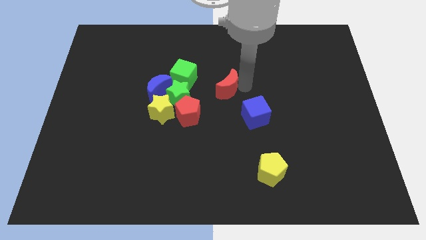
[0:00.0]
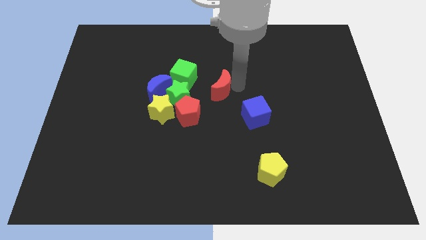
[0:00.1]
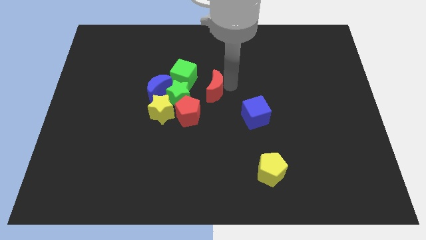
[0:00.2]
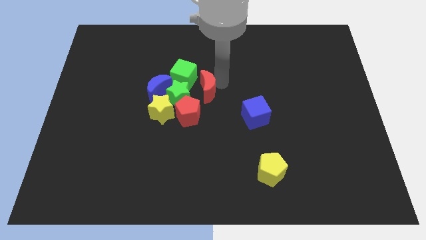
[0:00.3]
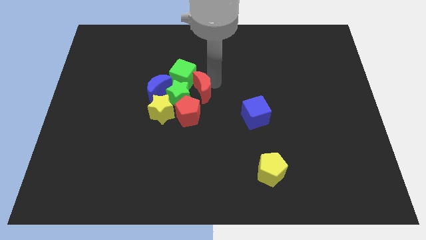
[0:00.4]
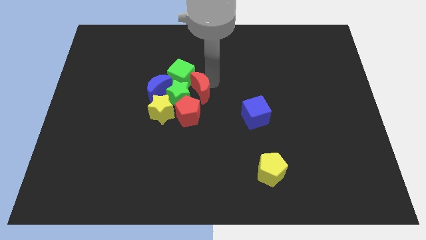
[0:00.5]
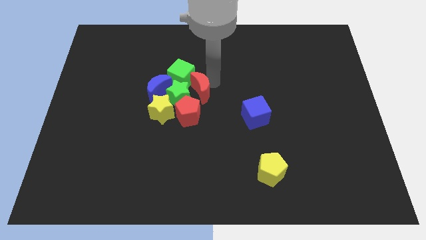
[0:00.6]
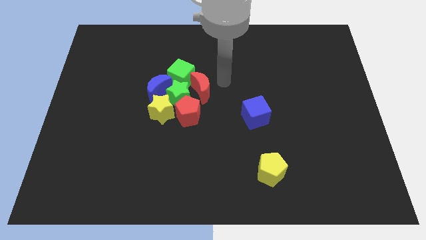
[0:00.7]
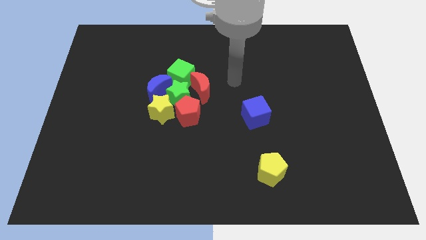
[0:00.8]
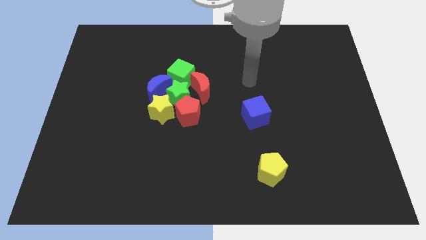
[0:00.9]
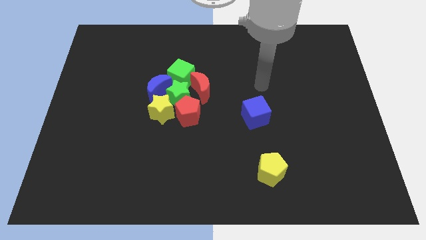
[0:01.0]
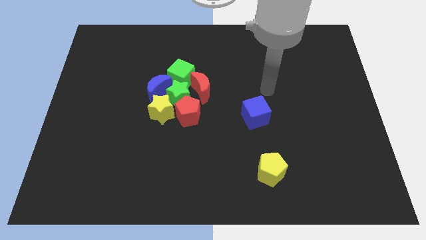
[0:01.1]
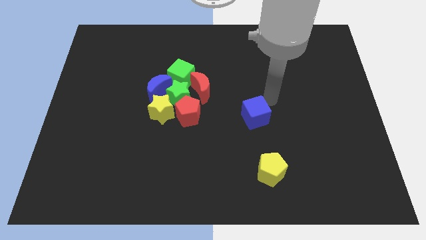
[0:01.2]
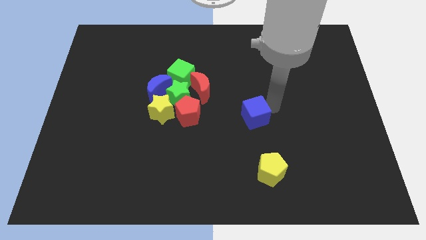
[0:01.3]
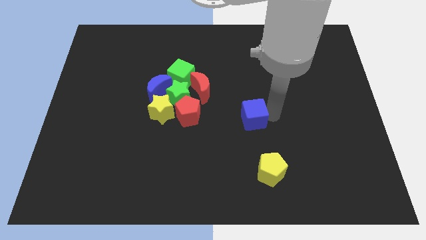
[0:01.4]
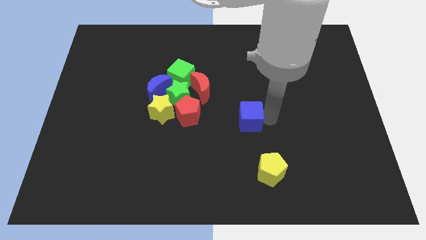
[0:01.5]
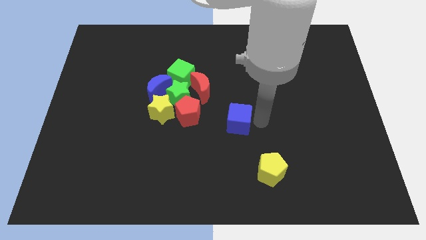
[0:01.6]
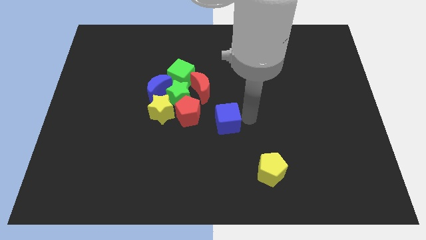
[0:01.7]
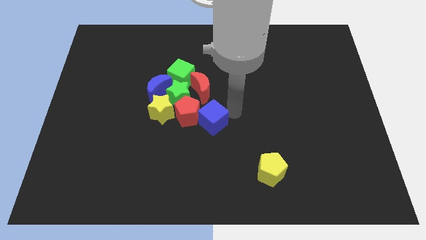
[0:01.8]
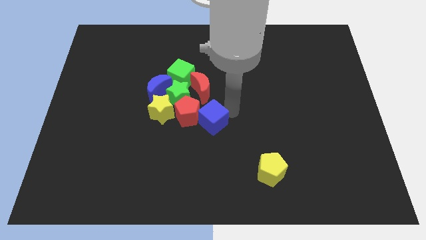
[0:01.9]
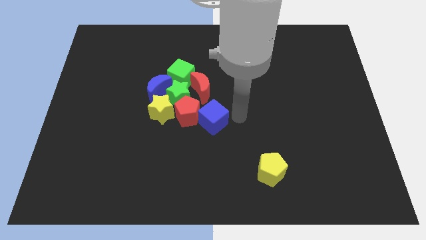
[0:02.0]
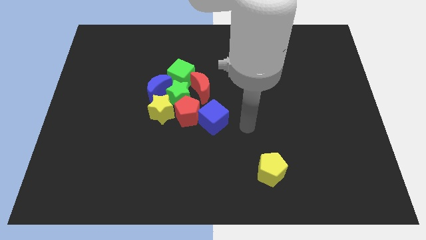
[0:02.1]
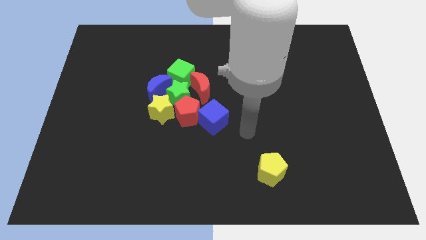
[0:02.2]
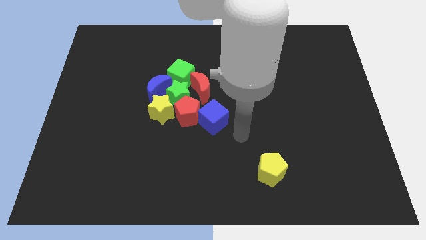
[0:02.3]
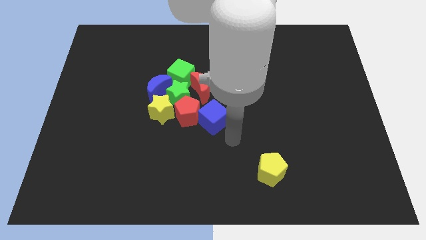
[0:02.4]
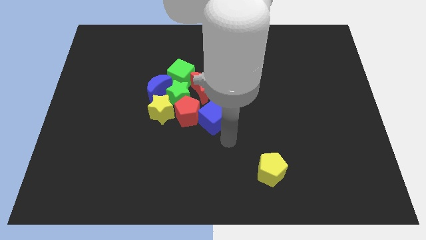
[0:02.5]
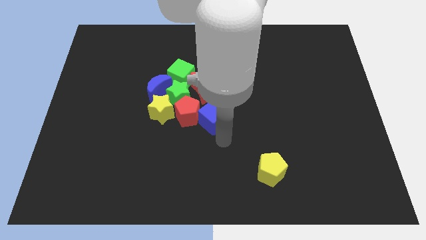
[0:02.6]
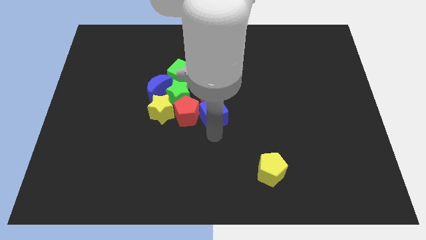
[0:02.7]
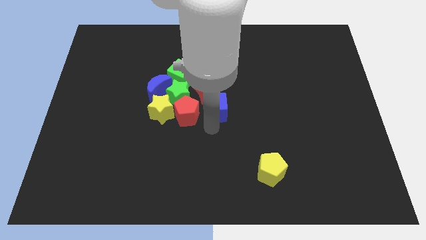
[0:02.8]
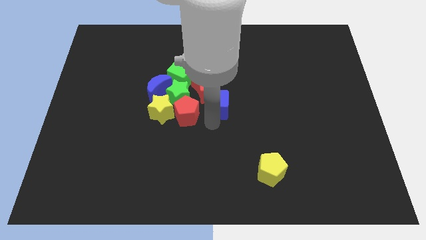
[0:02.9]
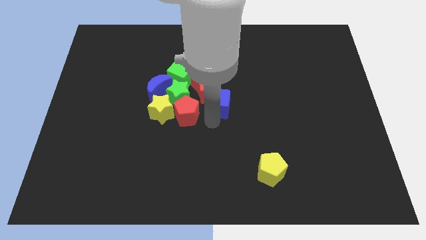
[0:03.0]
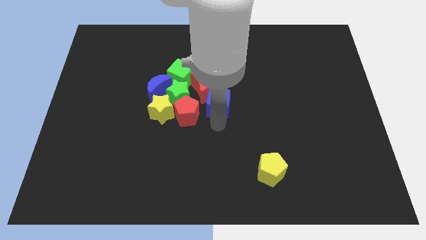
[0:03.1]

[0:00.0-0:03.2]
push the blue cube and red moon into the group of blocks

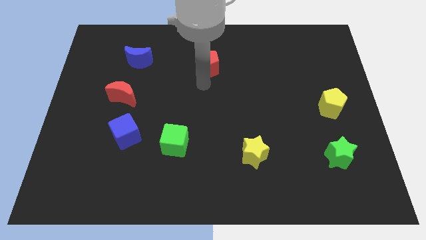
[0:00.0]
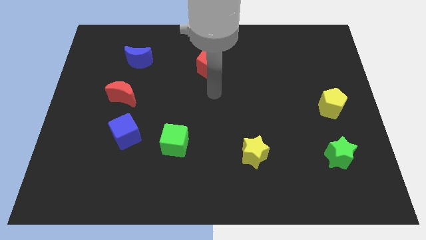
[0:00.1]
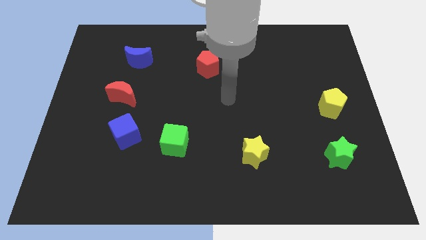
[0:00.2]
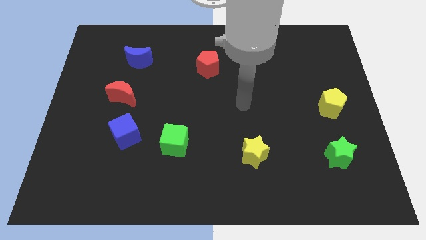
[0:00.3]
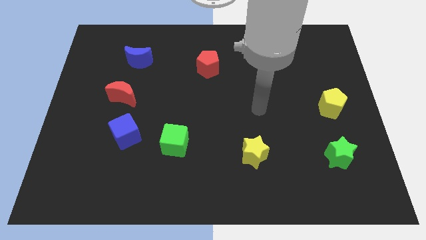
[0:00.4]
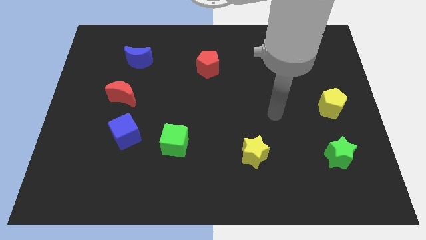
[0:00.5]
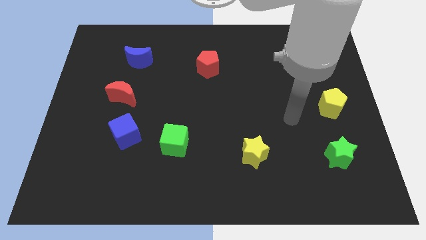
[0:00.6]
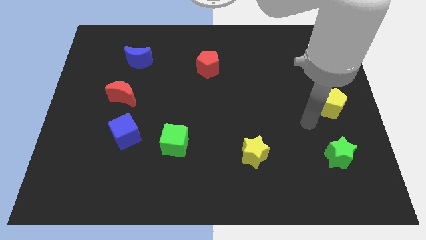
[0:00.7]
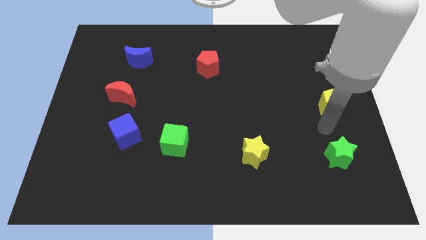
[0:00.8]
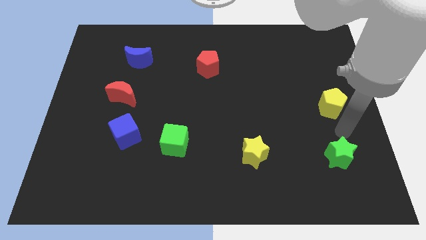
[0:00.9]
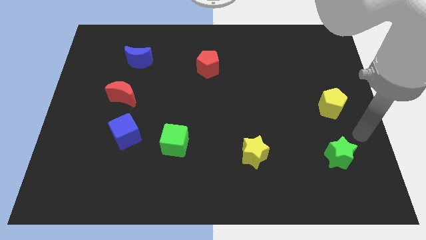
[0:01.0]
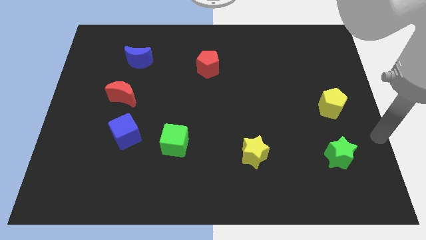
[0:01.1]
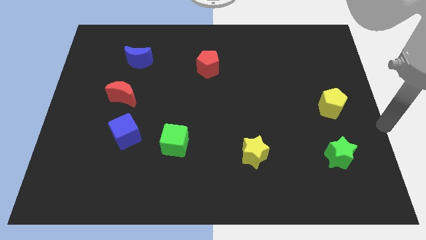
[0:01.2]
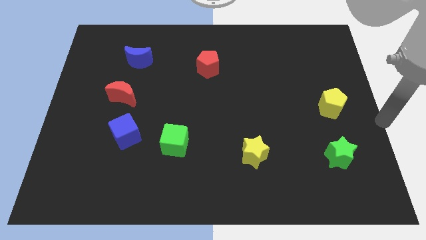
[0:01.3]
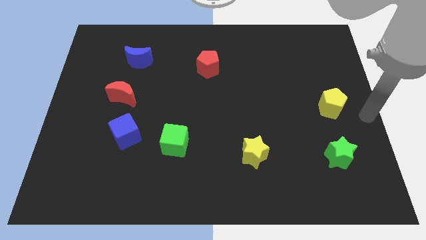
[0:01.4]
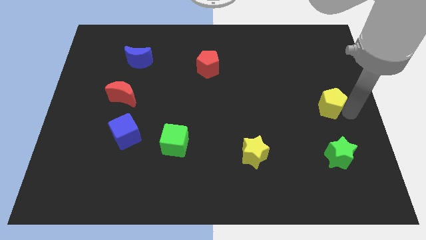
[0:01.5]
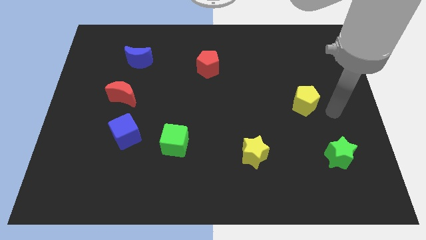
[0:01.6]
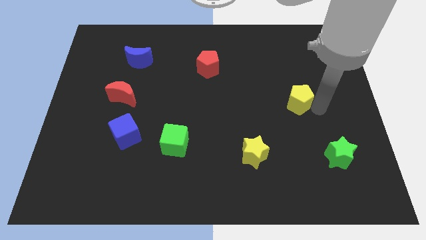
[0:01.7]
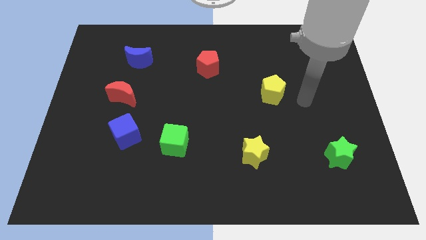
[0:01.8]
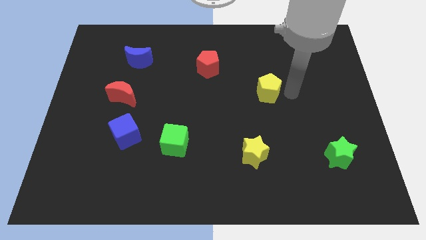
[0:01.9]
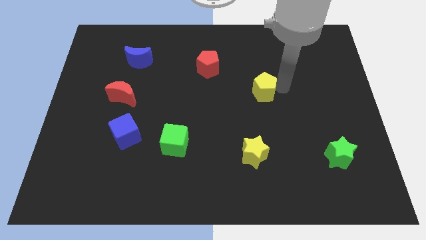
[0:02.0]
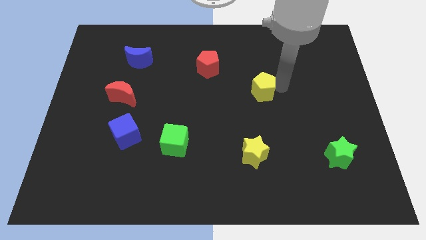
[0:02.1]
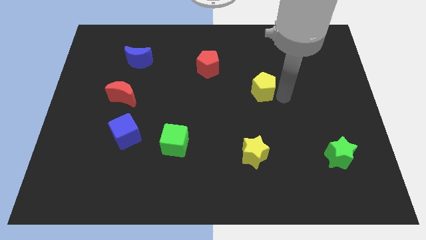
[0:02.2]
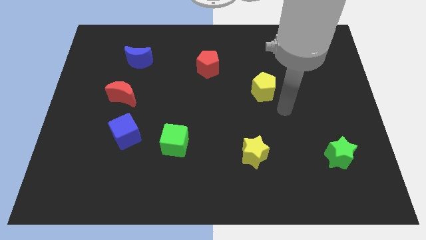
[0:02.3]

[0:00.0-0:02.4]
place the yellow pentagon vertically above to the yellow star

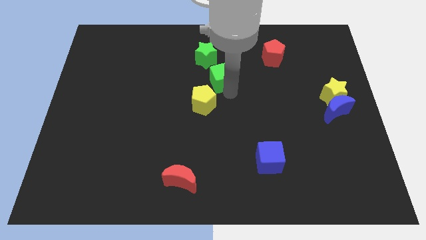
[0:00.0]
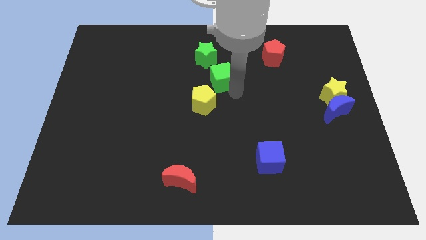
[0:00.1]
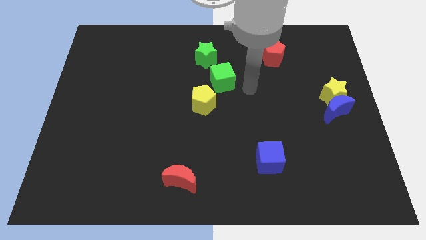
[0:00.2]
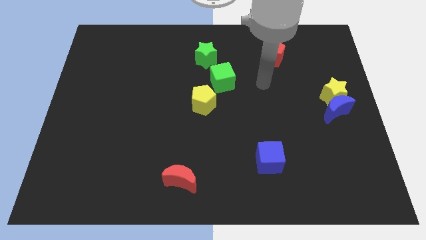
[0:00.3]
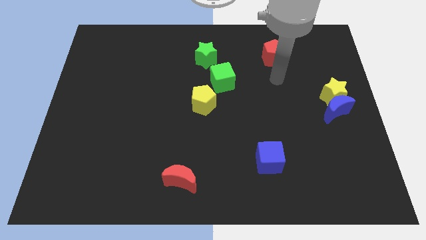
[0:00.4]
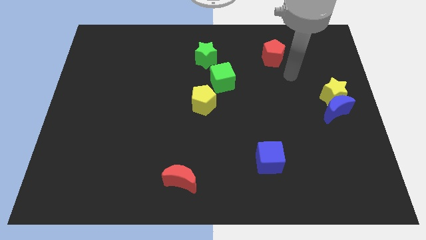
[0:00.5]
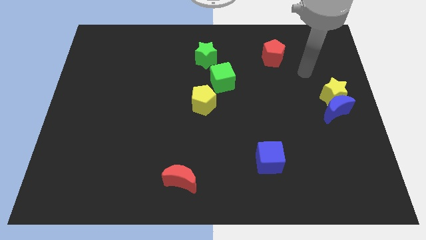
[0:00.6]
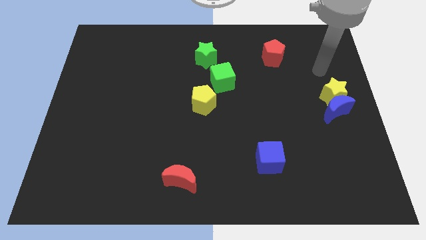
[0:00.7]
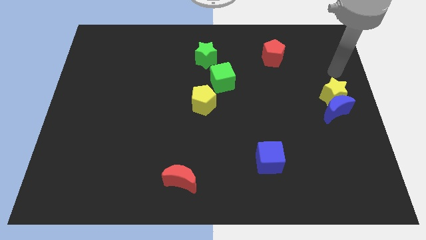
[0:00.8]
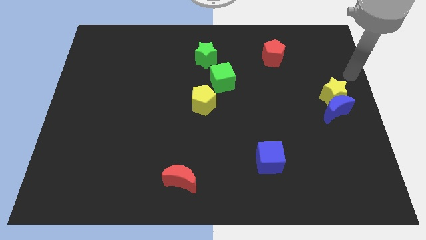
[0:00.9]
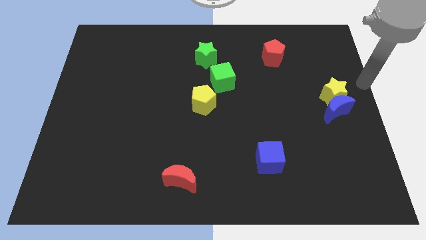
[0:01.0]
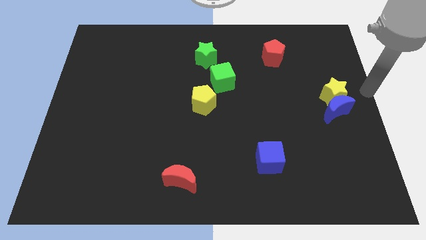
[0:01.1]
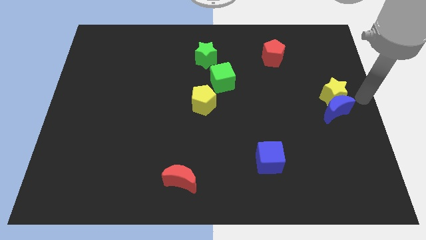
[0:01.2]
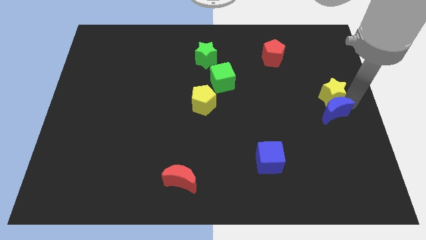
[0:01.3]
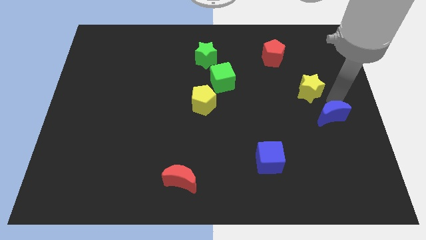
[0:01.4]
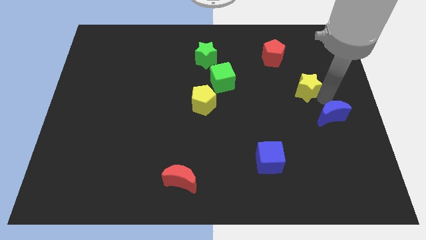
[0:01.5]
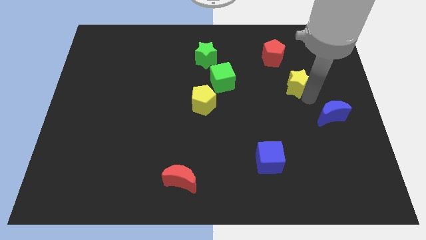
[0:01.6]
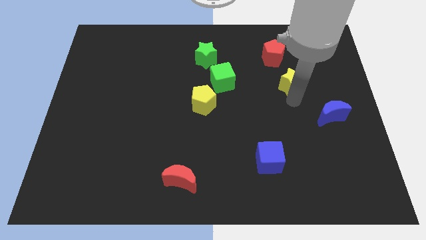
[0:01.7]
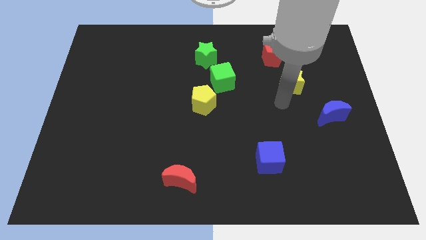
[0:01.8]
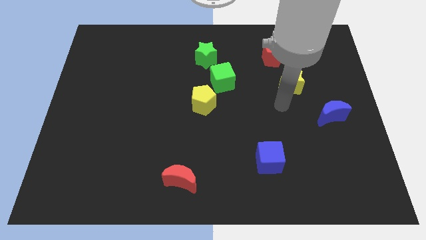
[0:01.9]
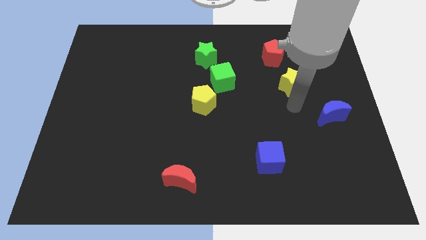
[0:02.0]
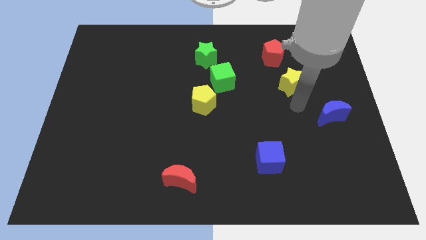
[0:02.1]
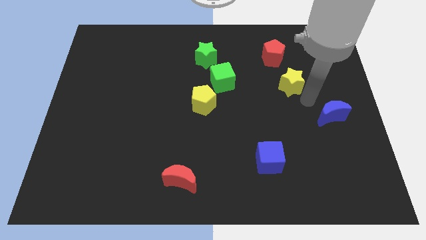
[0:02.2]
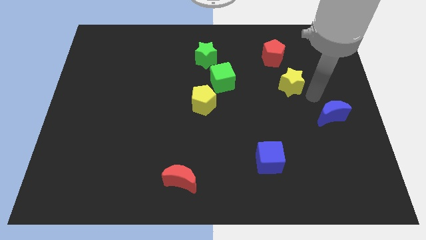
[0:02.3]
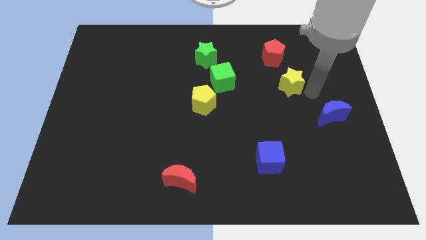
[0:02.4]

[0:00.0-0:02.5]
move the yellow star between red pentagon and blue moon

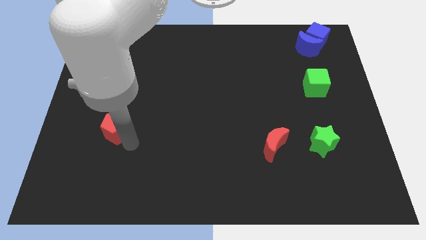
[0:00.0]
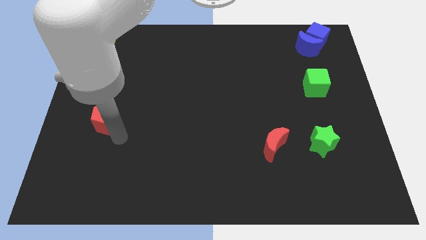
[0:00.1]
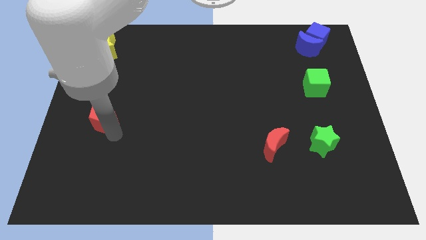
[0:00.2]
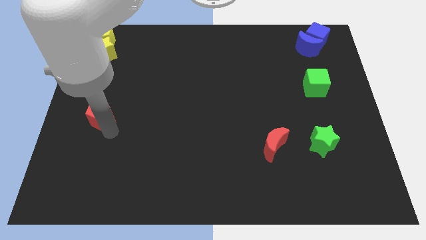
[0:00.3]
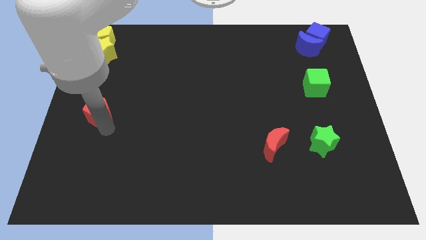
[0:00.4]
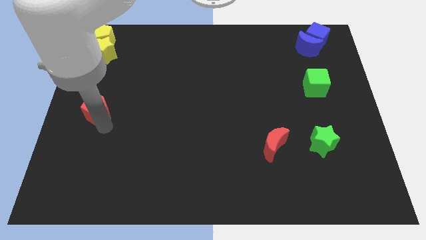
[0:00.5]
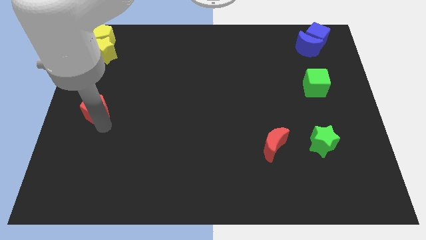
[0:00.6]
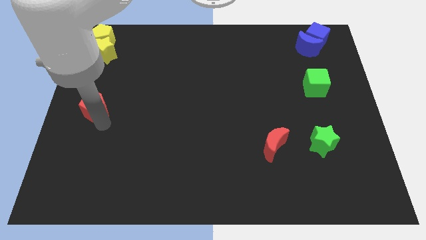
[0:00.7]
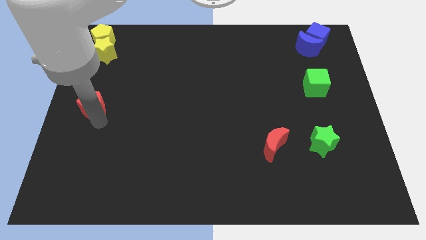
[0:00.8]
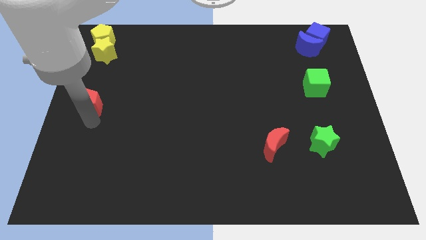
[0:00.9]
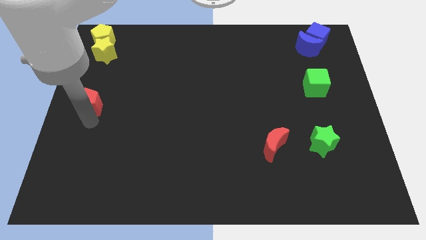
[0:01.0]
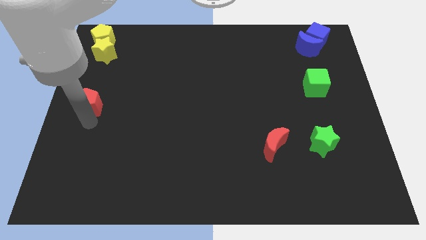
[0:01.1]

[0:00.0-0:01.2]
place red pentagon on the left side of the board
